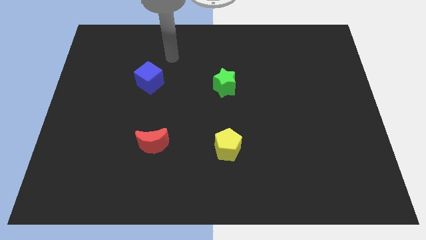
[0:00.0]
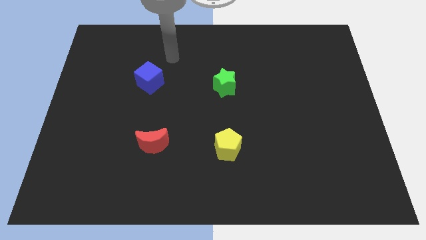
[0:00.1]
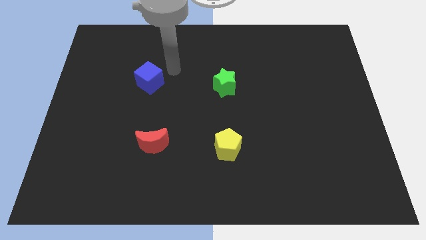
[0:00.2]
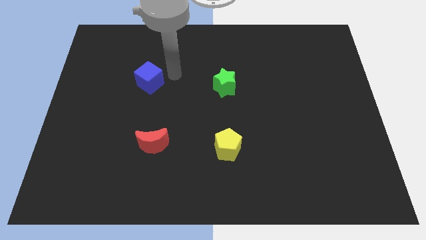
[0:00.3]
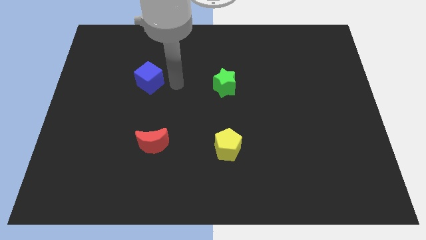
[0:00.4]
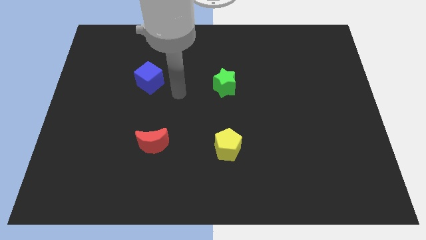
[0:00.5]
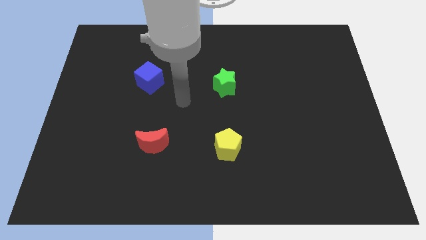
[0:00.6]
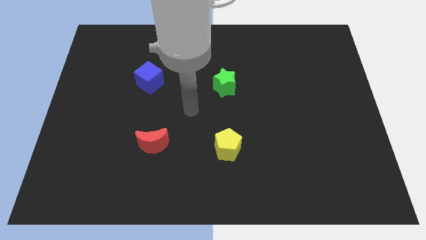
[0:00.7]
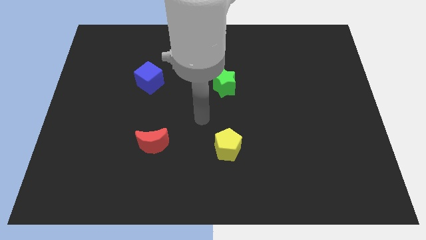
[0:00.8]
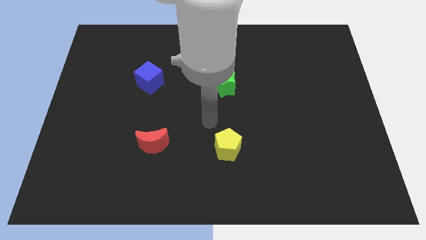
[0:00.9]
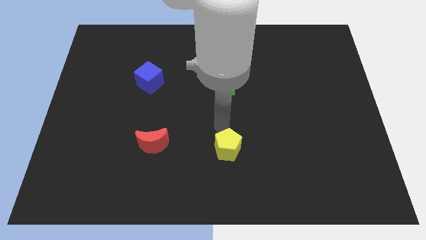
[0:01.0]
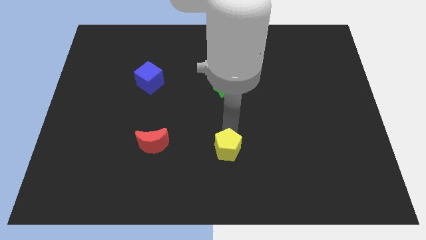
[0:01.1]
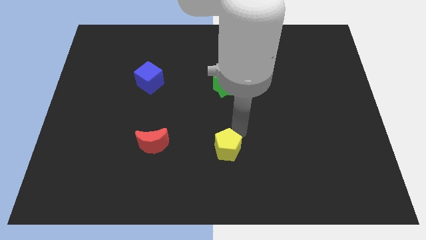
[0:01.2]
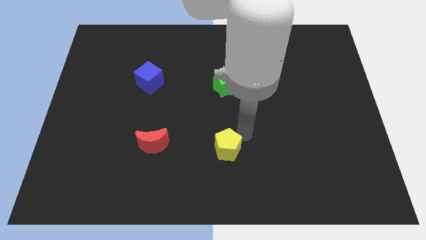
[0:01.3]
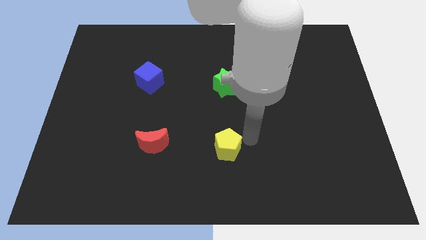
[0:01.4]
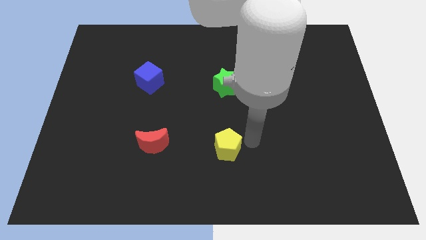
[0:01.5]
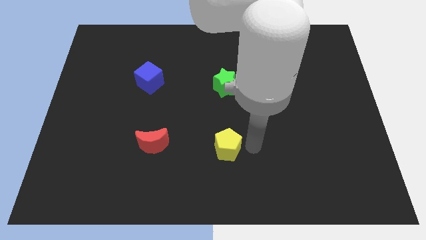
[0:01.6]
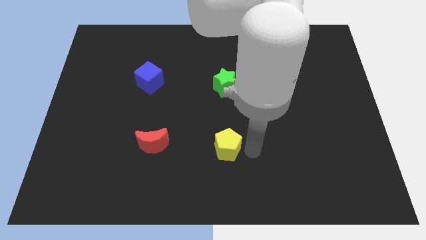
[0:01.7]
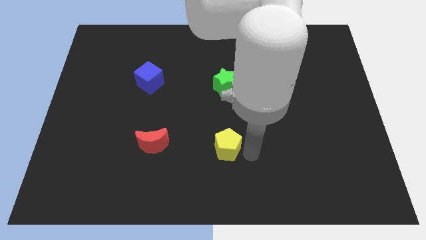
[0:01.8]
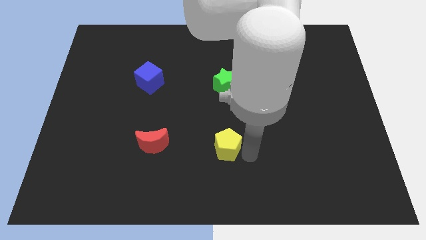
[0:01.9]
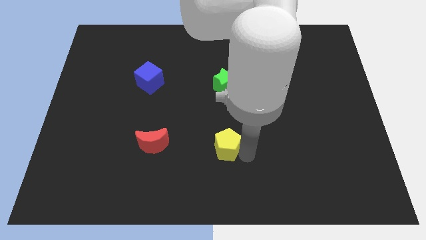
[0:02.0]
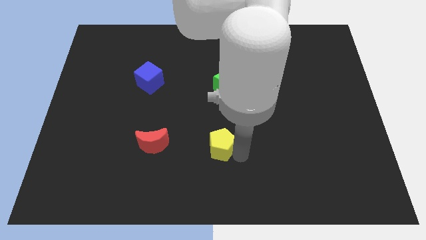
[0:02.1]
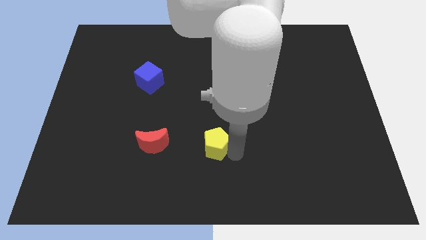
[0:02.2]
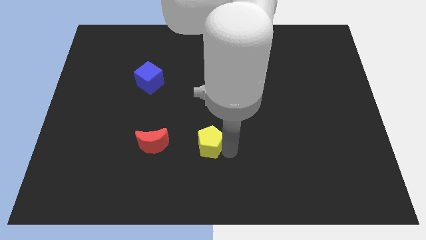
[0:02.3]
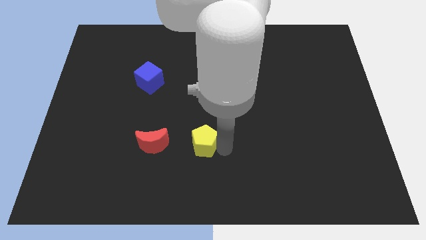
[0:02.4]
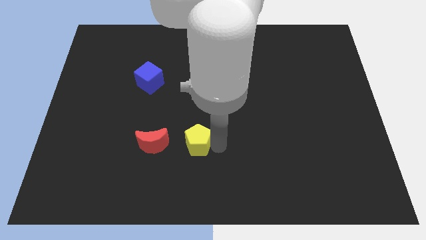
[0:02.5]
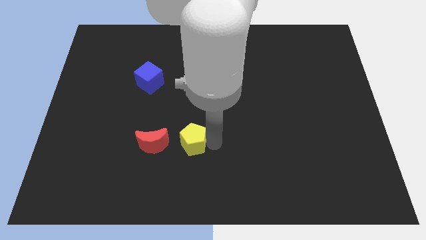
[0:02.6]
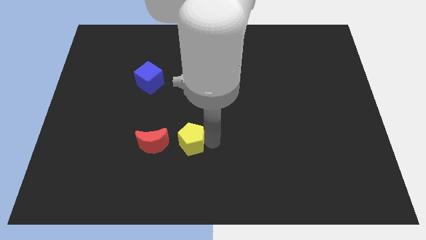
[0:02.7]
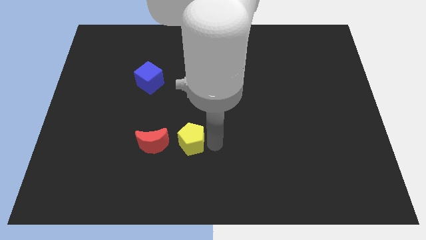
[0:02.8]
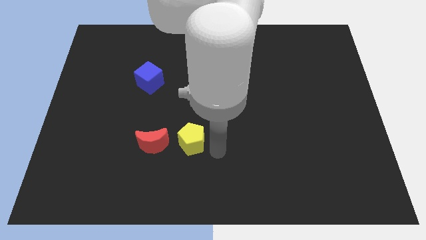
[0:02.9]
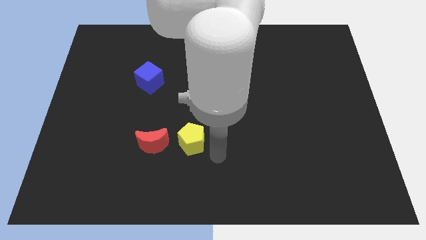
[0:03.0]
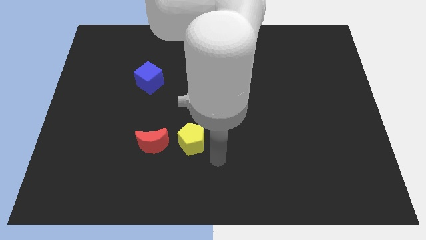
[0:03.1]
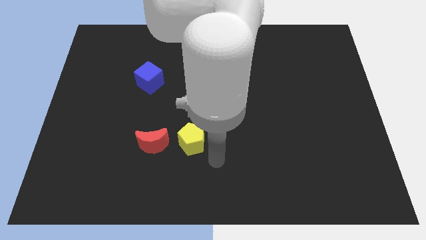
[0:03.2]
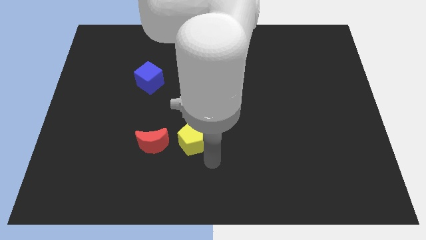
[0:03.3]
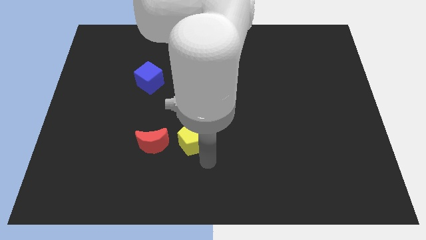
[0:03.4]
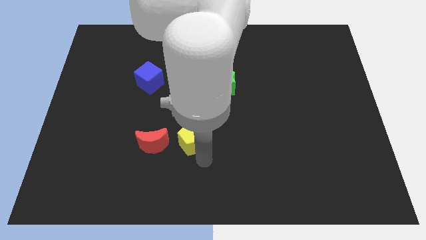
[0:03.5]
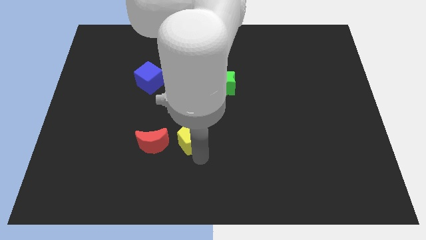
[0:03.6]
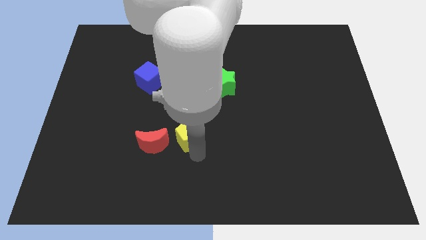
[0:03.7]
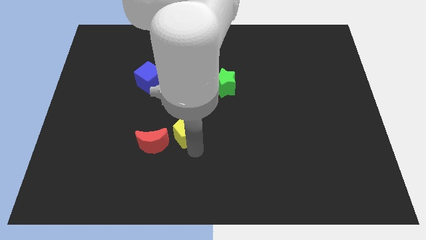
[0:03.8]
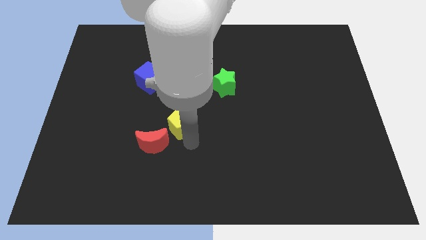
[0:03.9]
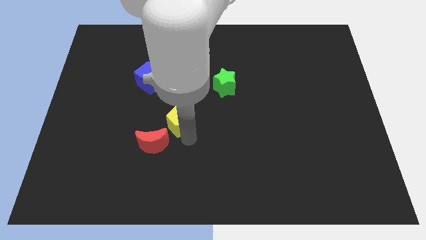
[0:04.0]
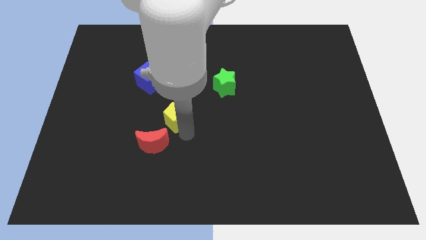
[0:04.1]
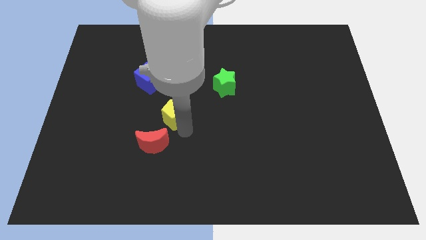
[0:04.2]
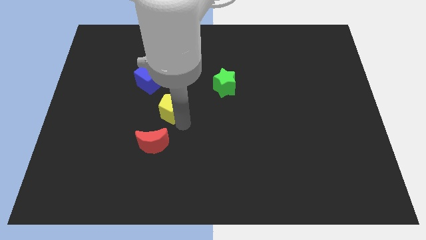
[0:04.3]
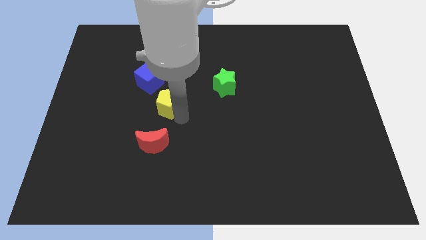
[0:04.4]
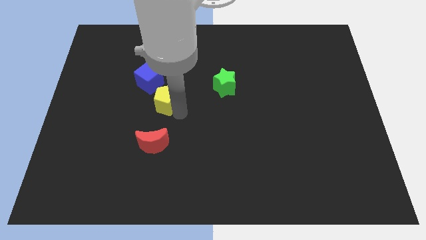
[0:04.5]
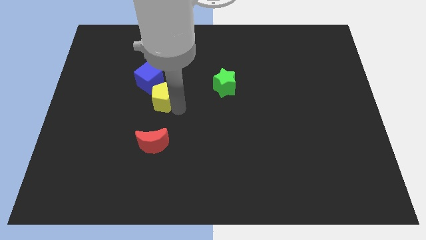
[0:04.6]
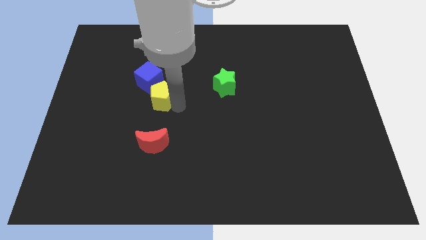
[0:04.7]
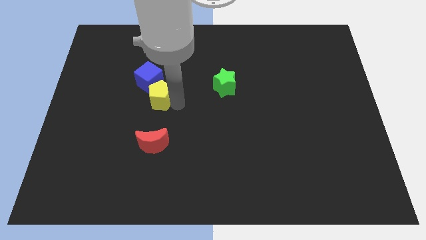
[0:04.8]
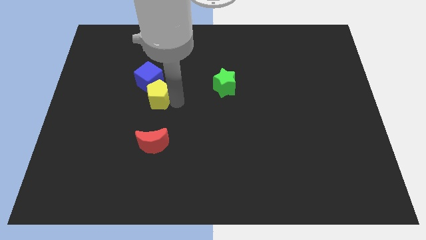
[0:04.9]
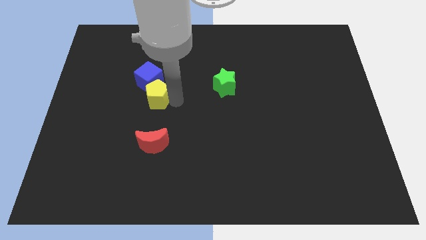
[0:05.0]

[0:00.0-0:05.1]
move the yellow block to the blue cube

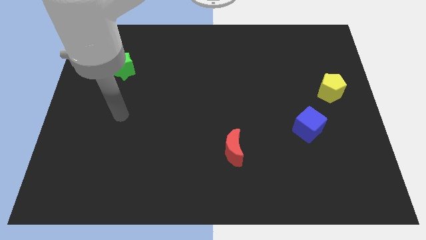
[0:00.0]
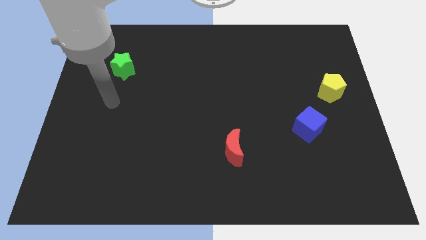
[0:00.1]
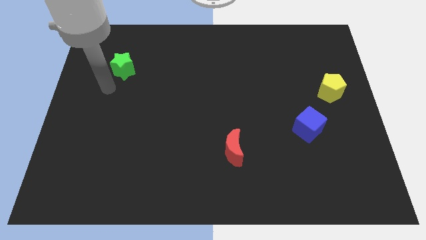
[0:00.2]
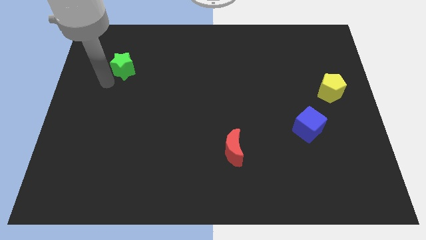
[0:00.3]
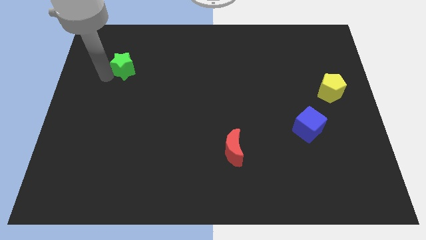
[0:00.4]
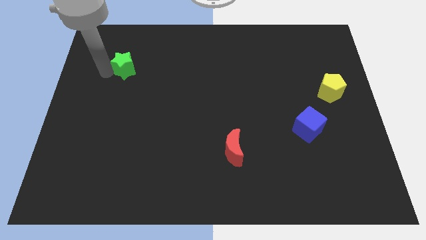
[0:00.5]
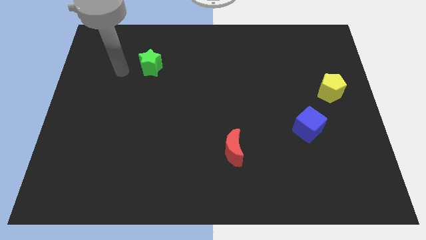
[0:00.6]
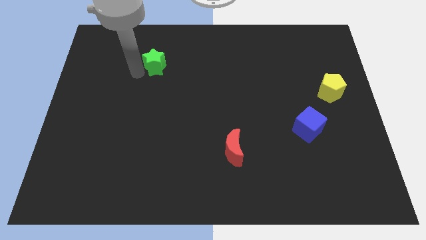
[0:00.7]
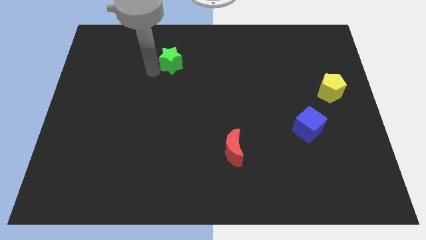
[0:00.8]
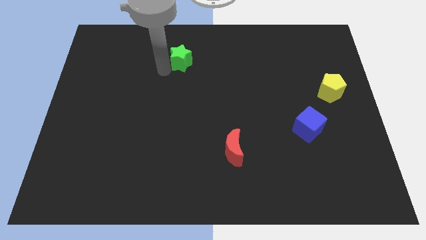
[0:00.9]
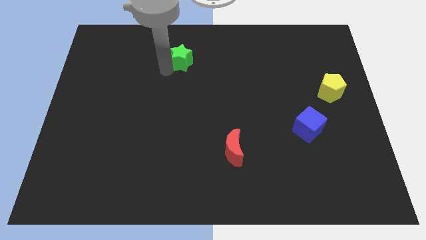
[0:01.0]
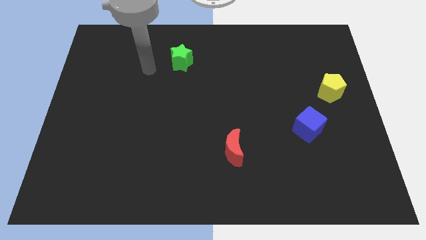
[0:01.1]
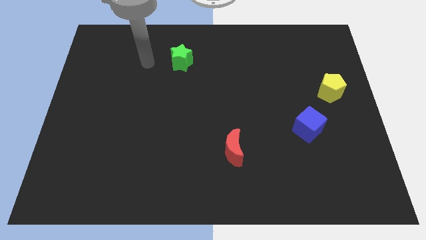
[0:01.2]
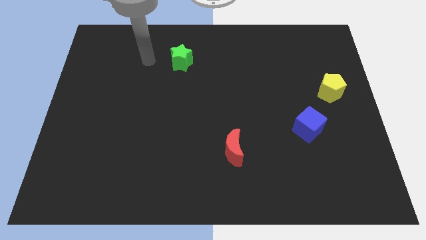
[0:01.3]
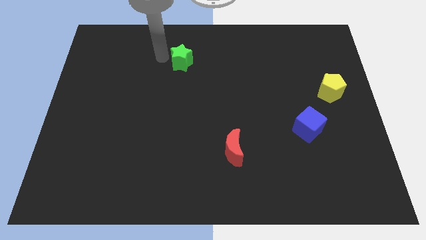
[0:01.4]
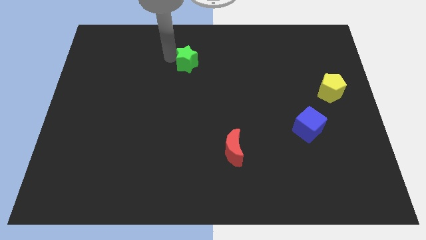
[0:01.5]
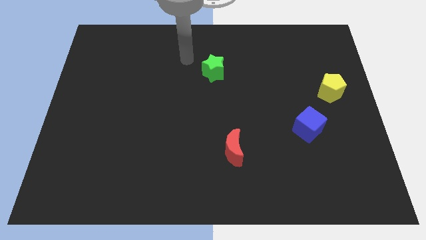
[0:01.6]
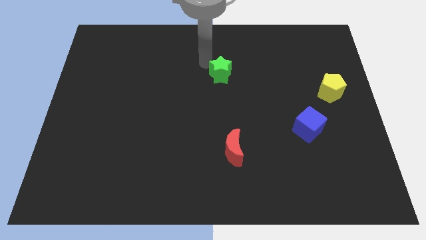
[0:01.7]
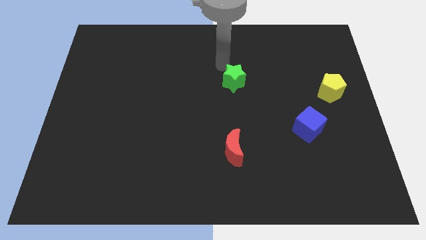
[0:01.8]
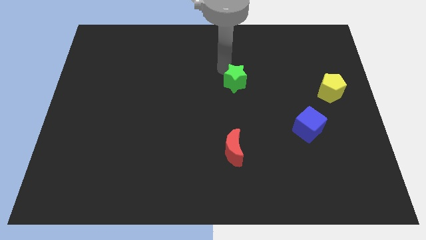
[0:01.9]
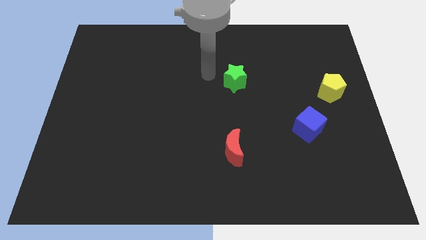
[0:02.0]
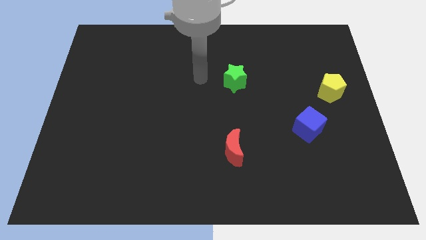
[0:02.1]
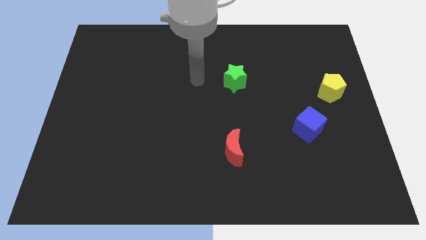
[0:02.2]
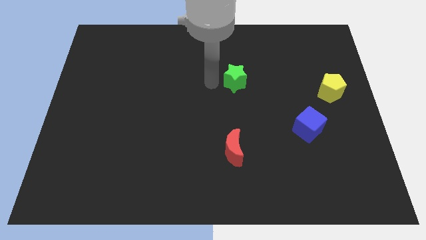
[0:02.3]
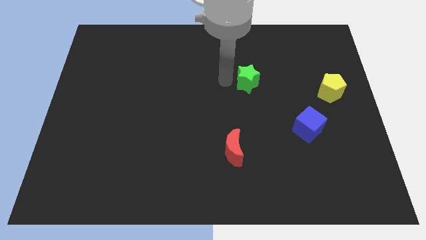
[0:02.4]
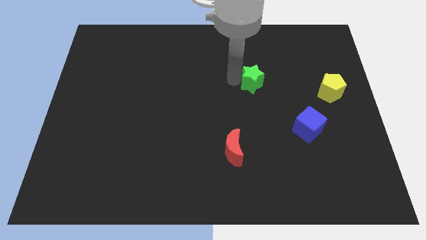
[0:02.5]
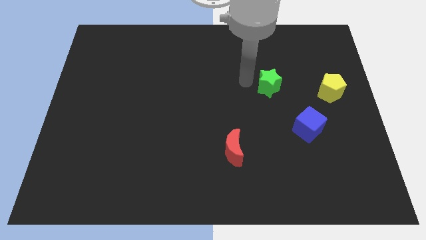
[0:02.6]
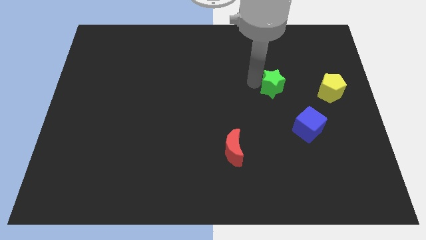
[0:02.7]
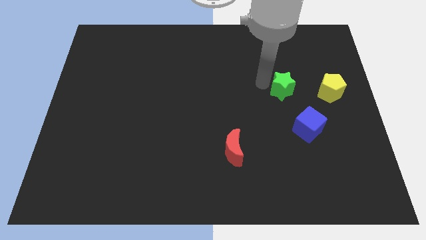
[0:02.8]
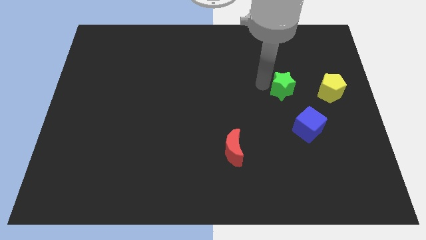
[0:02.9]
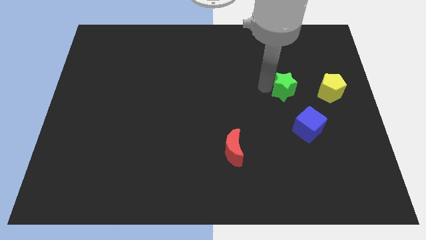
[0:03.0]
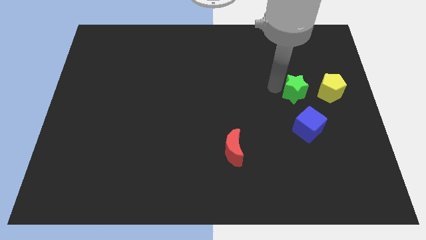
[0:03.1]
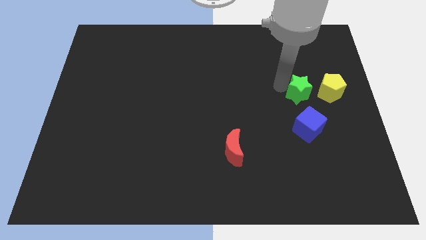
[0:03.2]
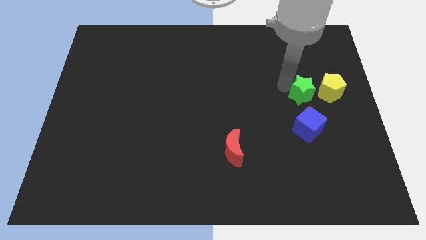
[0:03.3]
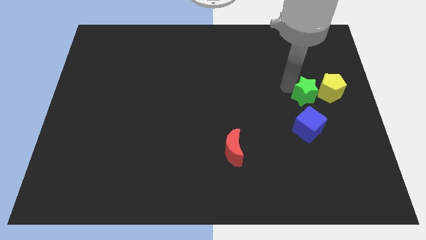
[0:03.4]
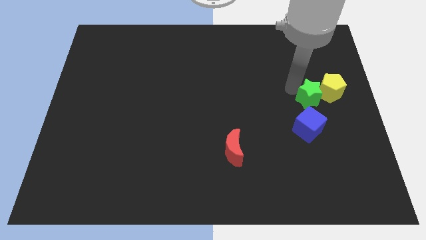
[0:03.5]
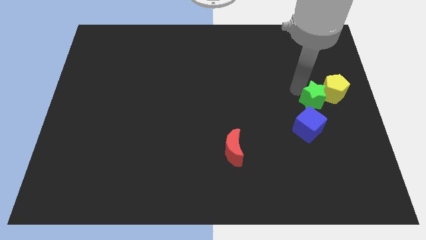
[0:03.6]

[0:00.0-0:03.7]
slide the green block close to the yellow pentagon
